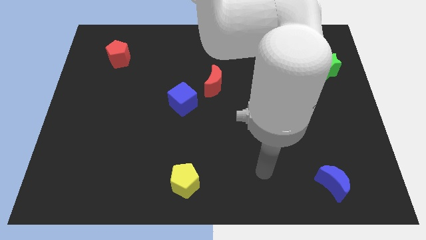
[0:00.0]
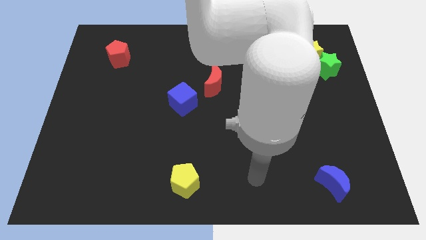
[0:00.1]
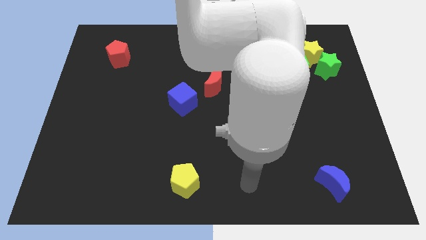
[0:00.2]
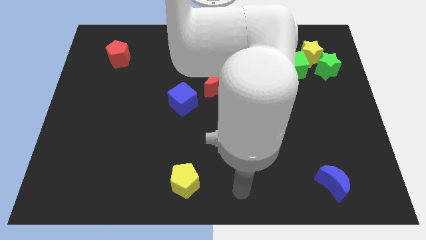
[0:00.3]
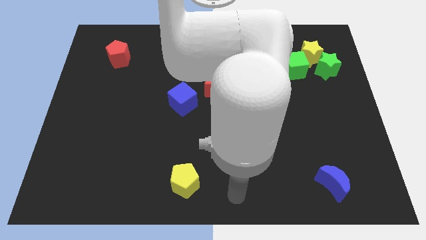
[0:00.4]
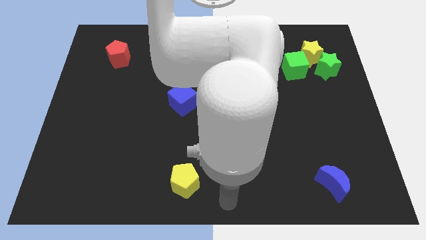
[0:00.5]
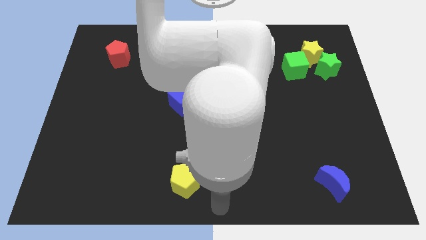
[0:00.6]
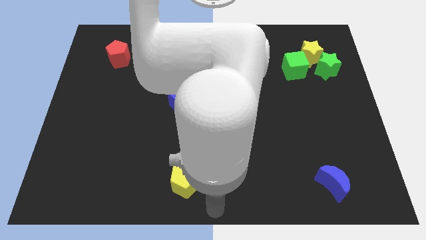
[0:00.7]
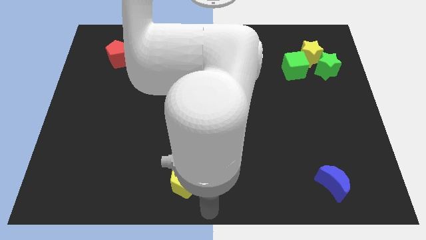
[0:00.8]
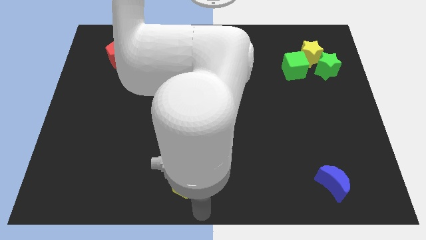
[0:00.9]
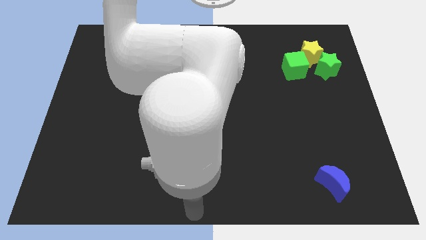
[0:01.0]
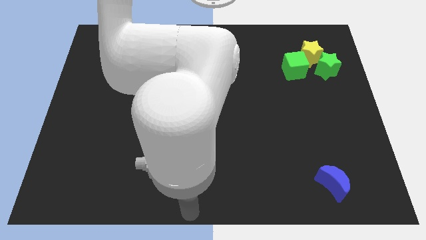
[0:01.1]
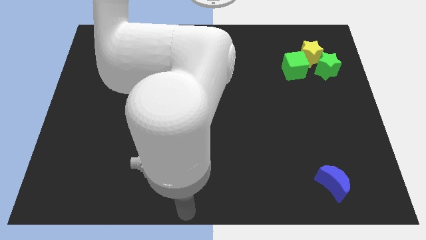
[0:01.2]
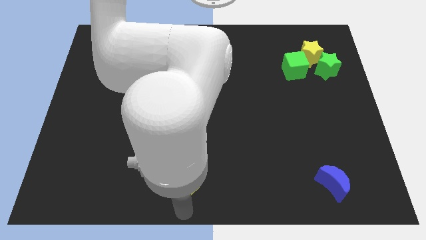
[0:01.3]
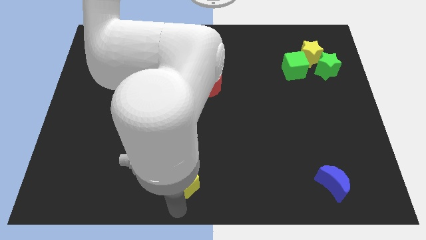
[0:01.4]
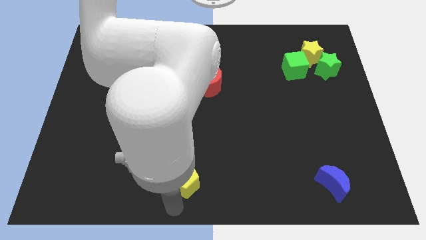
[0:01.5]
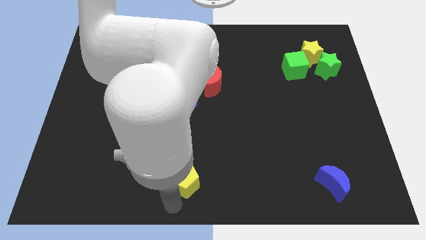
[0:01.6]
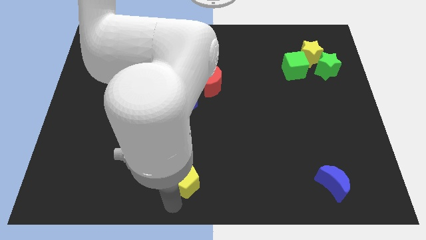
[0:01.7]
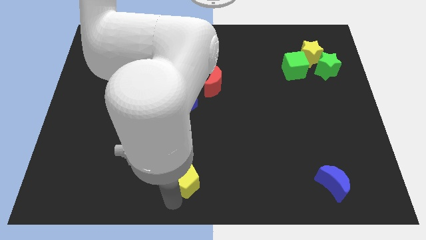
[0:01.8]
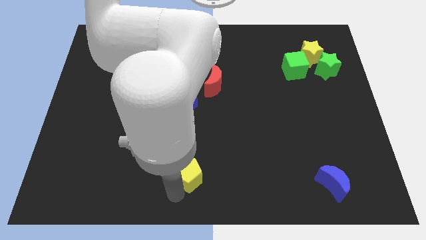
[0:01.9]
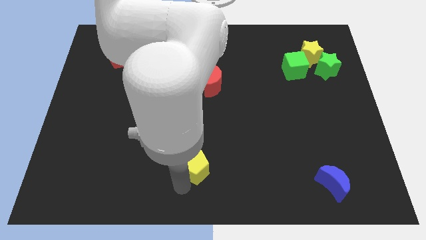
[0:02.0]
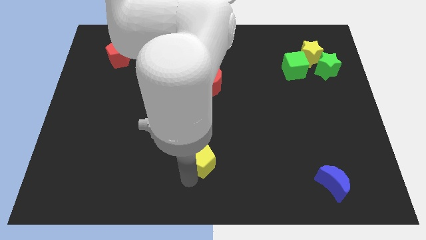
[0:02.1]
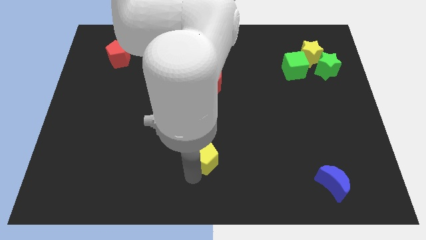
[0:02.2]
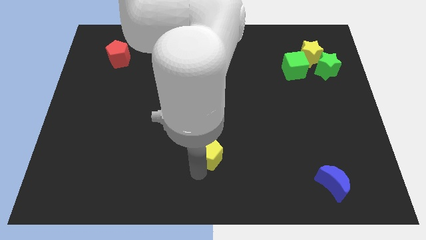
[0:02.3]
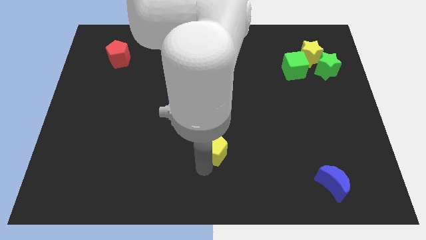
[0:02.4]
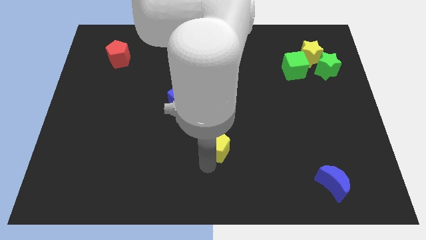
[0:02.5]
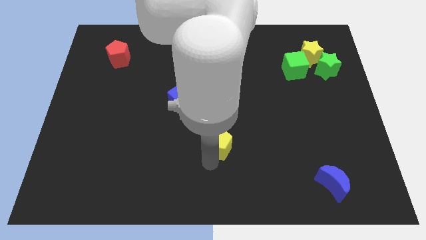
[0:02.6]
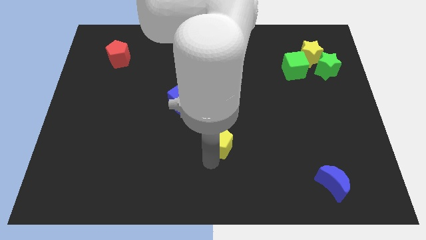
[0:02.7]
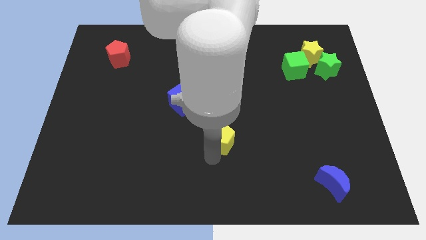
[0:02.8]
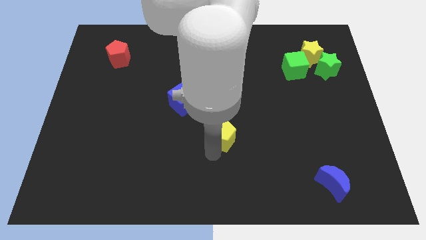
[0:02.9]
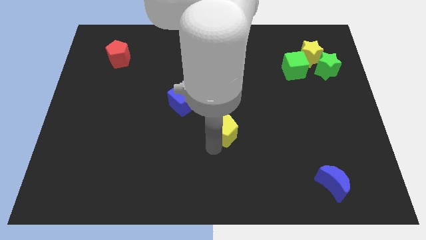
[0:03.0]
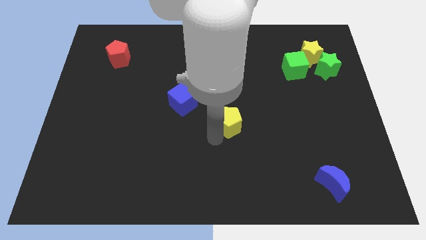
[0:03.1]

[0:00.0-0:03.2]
push yellow pentagon upwards

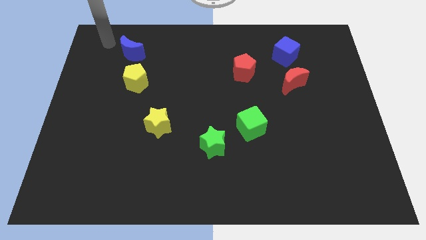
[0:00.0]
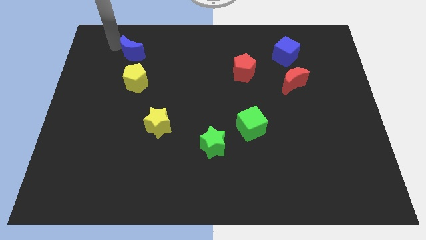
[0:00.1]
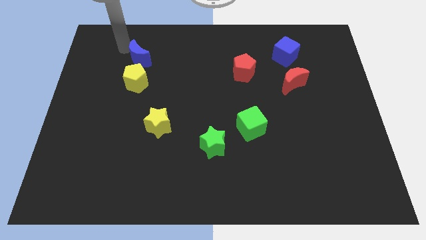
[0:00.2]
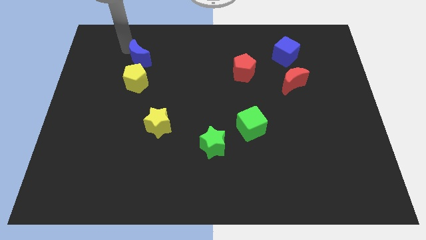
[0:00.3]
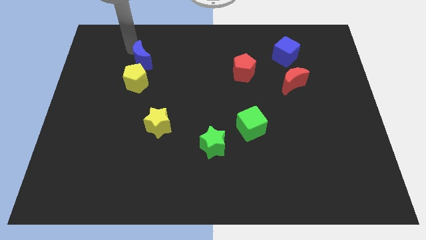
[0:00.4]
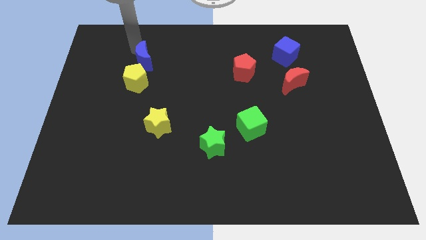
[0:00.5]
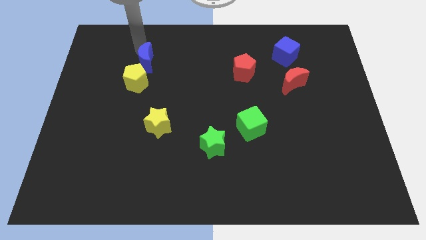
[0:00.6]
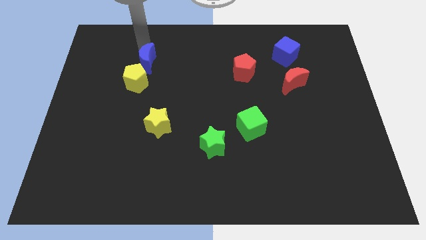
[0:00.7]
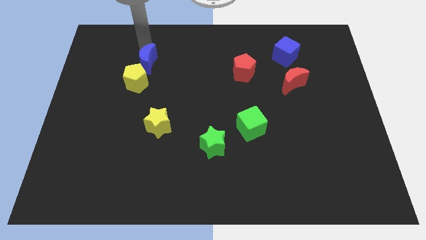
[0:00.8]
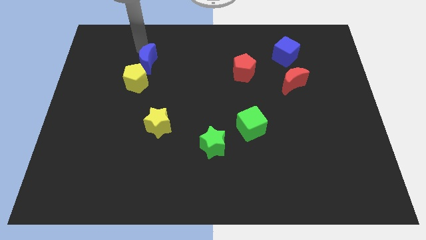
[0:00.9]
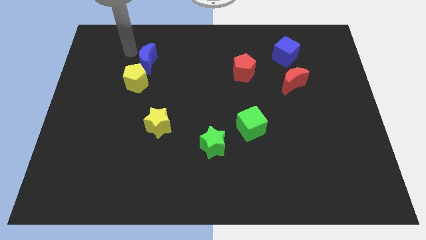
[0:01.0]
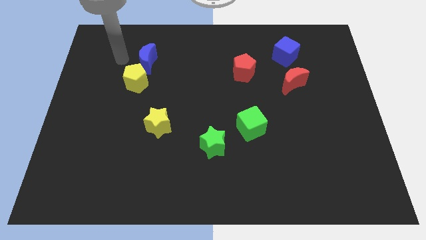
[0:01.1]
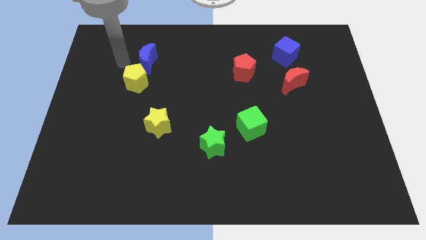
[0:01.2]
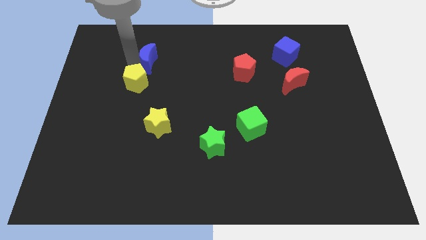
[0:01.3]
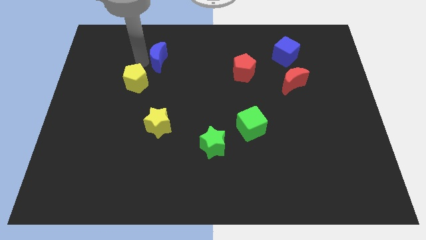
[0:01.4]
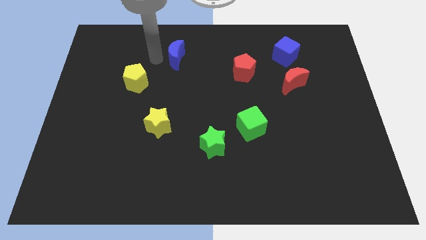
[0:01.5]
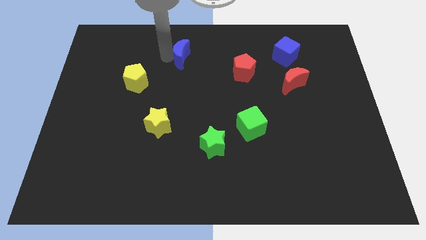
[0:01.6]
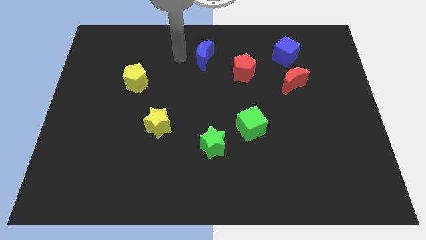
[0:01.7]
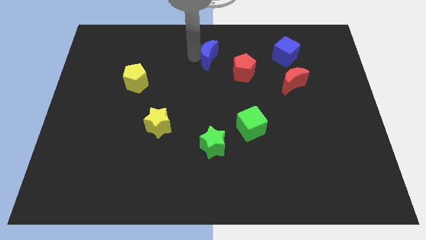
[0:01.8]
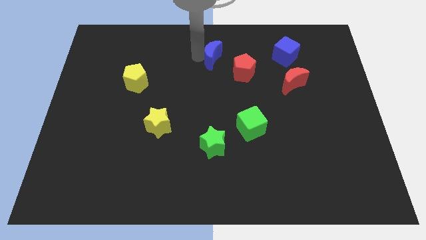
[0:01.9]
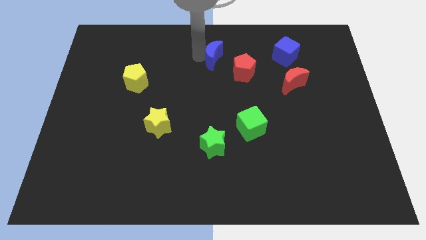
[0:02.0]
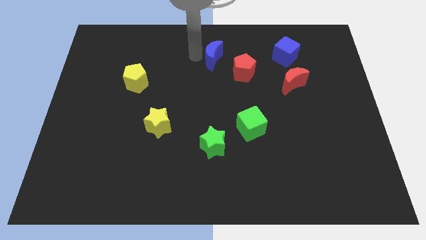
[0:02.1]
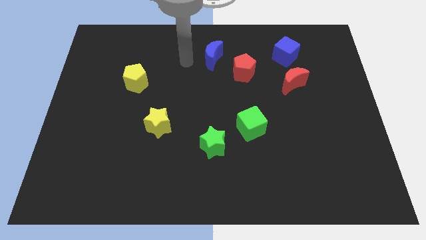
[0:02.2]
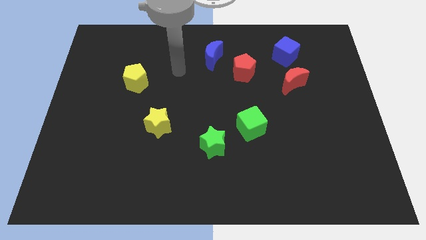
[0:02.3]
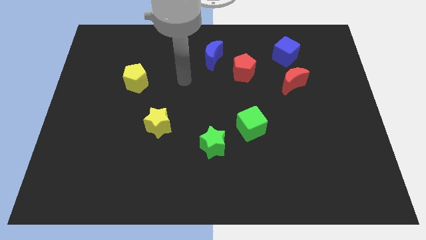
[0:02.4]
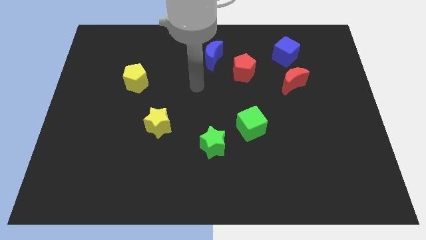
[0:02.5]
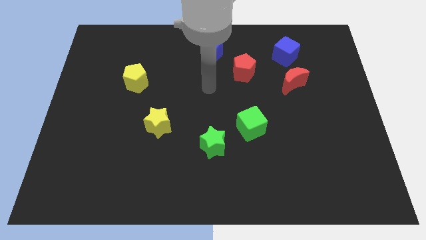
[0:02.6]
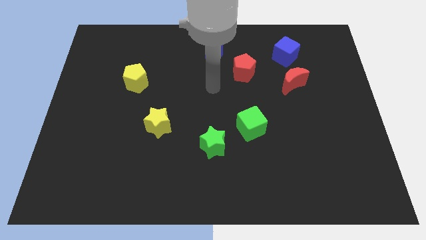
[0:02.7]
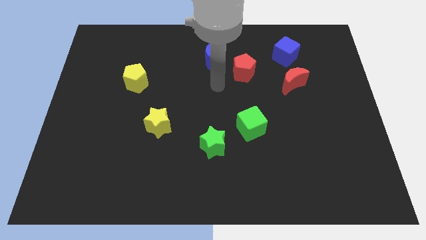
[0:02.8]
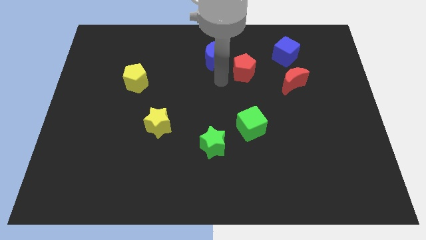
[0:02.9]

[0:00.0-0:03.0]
push the blue moon to the left side of the board

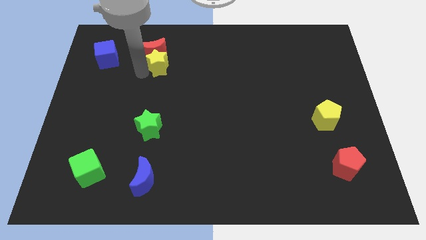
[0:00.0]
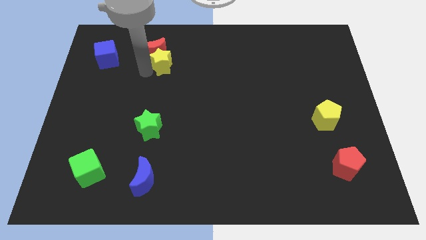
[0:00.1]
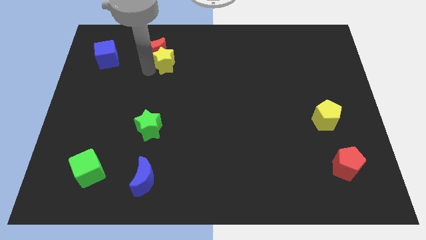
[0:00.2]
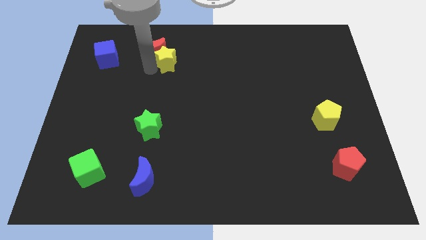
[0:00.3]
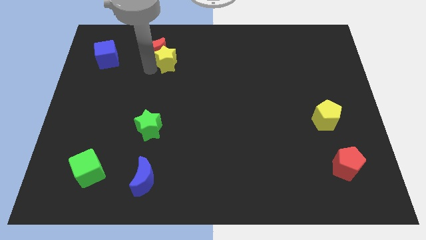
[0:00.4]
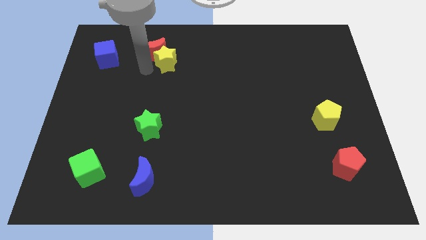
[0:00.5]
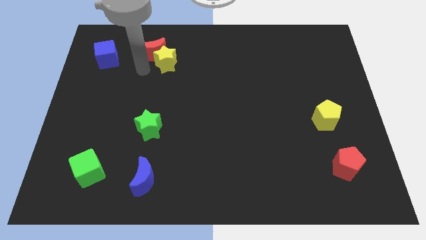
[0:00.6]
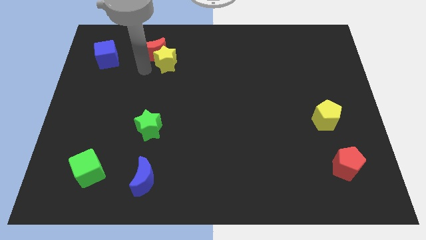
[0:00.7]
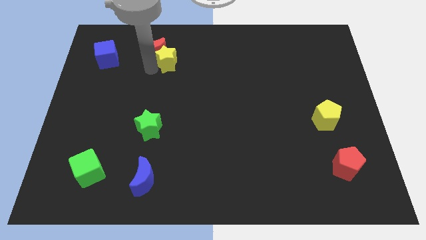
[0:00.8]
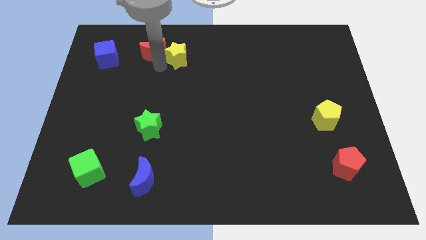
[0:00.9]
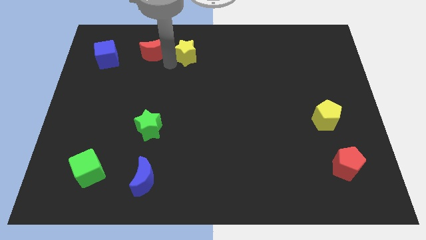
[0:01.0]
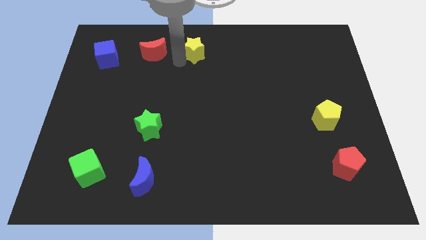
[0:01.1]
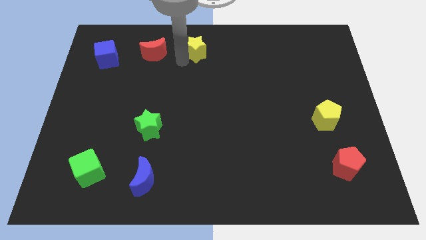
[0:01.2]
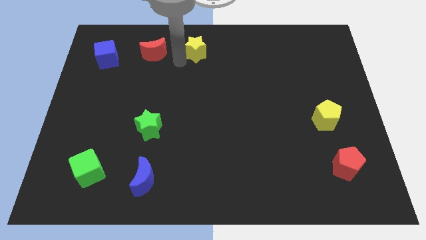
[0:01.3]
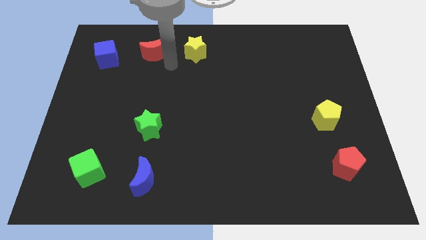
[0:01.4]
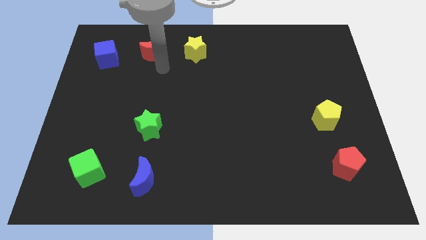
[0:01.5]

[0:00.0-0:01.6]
push the yellow star to the top center of the board

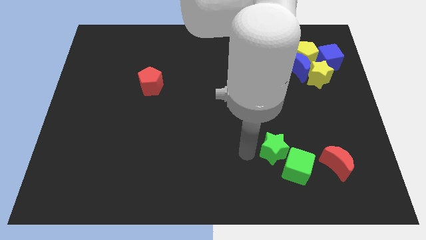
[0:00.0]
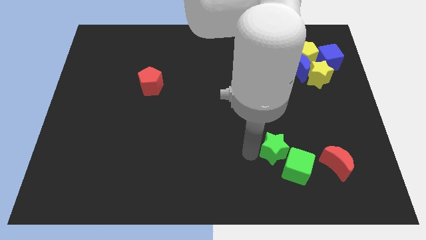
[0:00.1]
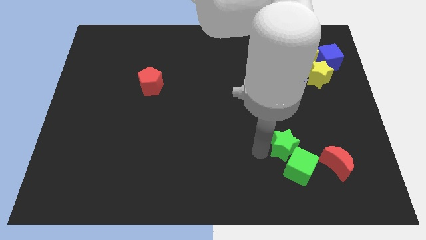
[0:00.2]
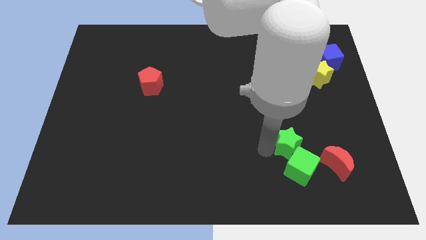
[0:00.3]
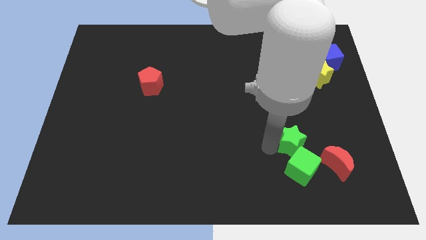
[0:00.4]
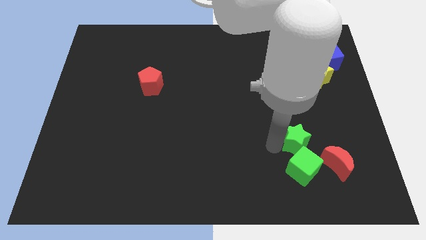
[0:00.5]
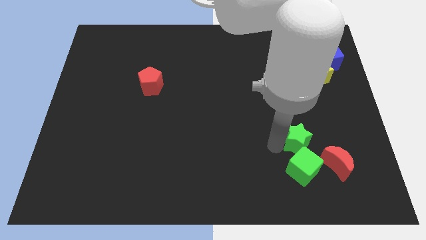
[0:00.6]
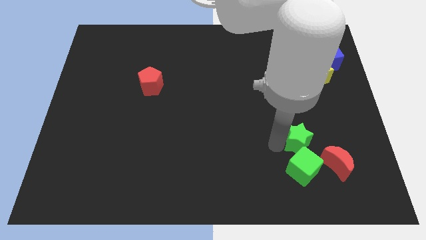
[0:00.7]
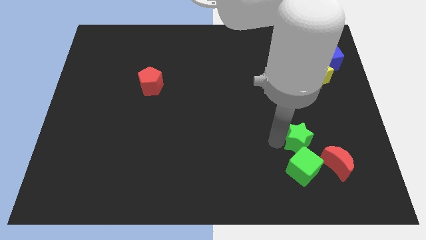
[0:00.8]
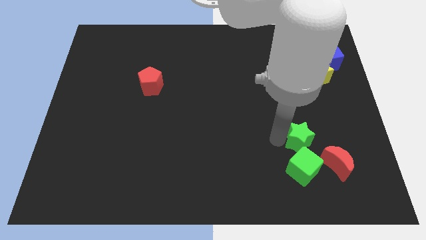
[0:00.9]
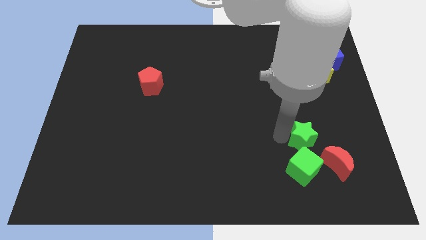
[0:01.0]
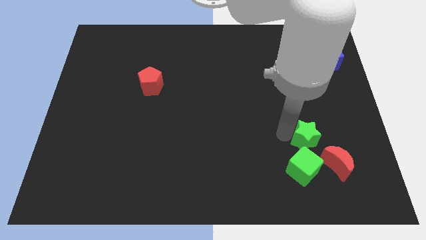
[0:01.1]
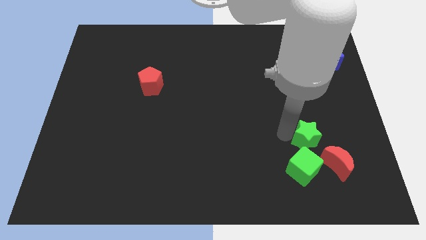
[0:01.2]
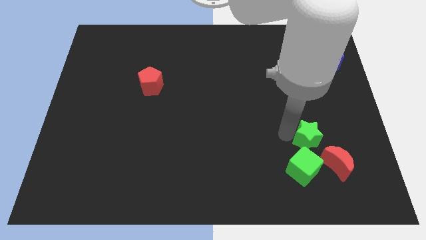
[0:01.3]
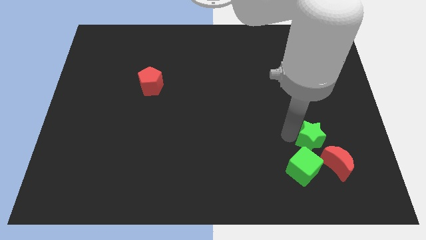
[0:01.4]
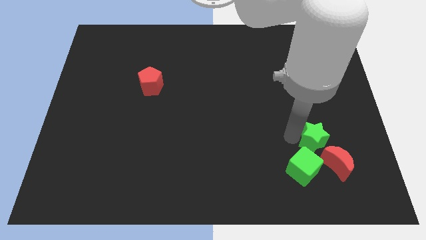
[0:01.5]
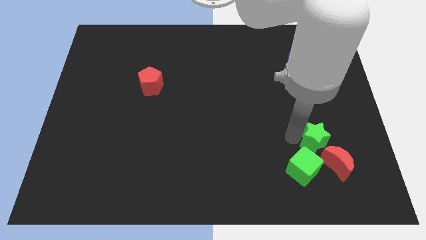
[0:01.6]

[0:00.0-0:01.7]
move the green star above the red crescent
